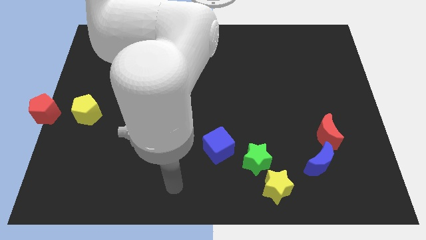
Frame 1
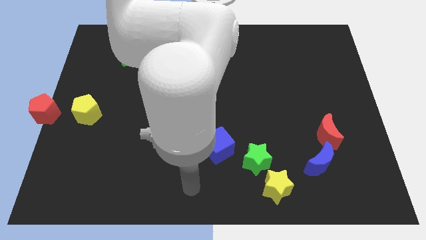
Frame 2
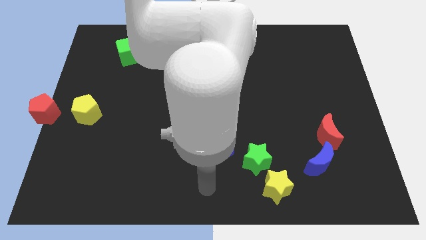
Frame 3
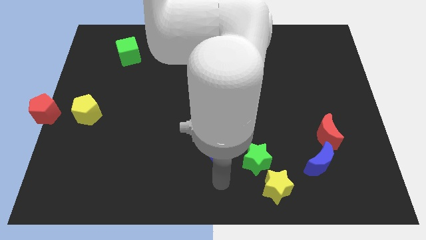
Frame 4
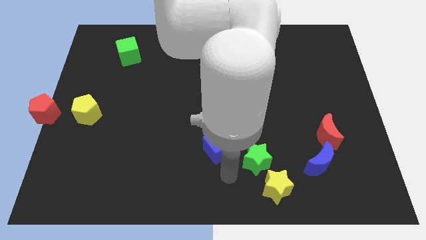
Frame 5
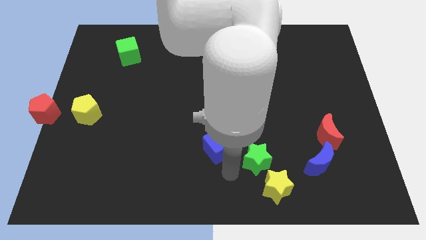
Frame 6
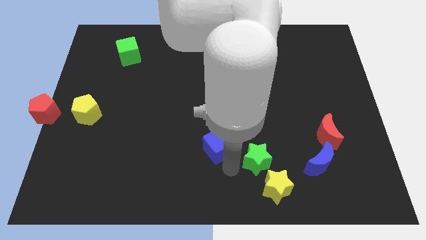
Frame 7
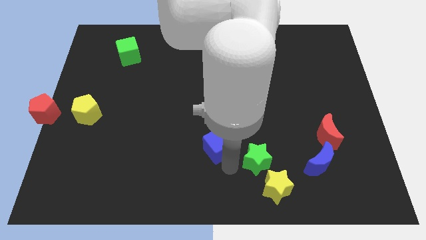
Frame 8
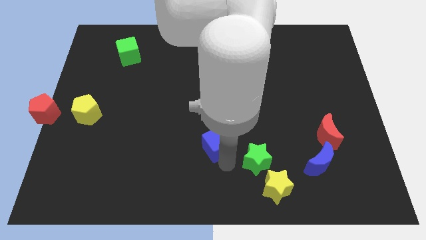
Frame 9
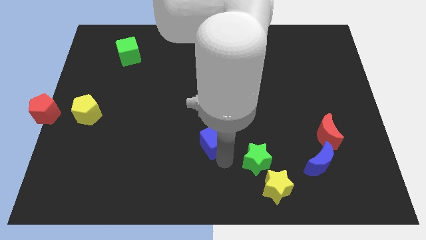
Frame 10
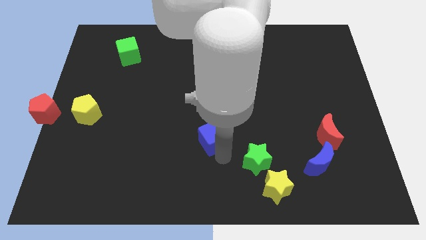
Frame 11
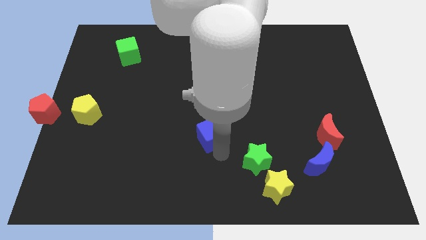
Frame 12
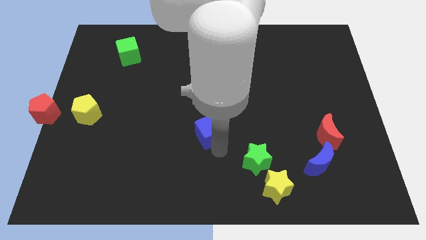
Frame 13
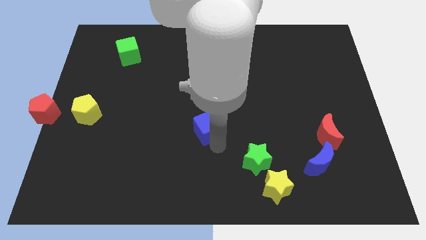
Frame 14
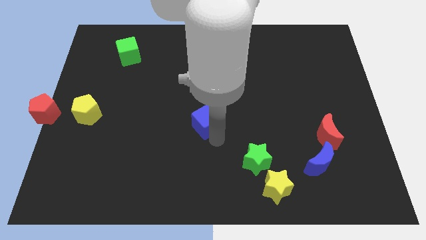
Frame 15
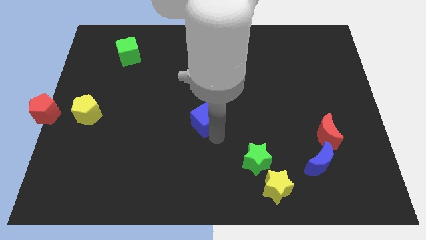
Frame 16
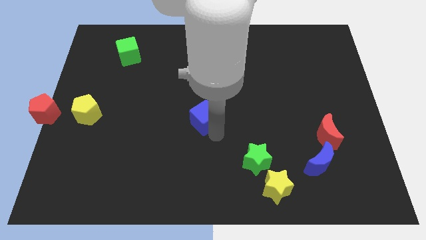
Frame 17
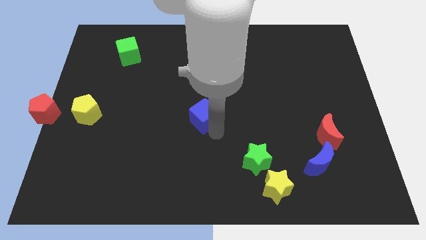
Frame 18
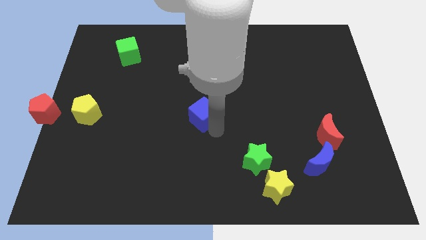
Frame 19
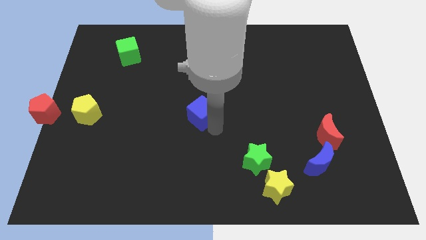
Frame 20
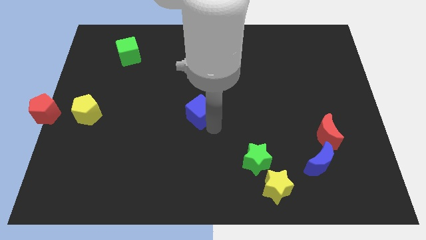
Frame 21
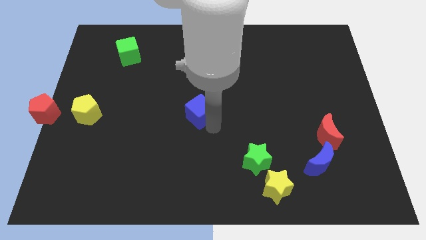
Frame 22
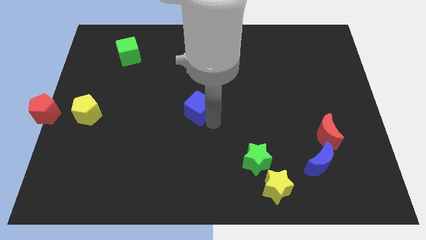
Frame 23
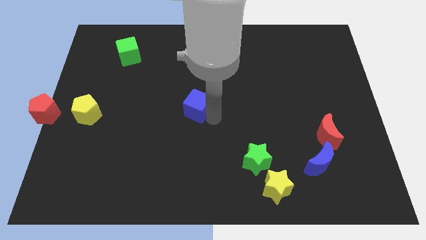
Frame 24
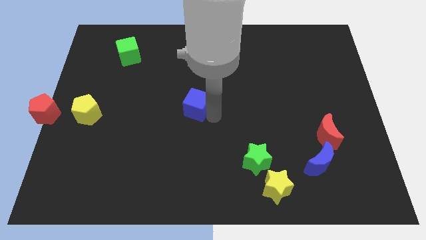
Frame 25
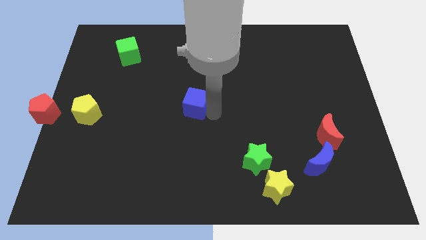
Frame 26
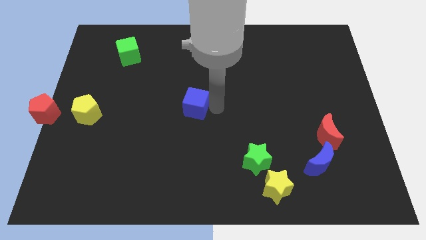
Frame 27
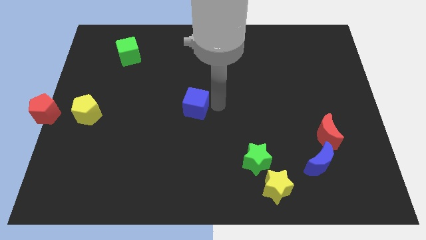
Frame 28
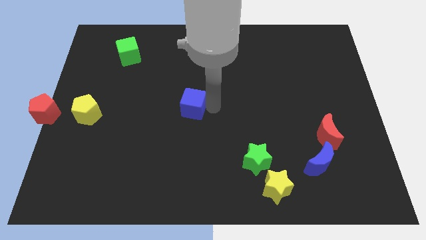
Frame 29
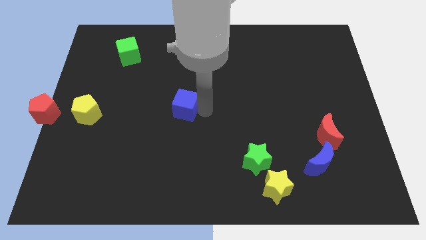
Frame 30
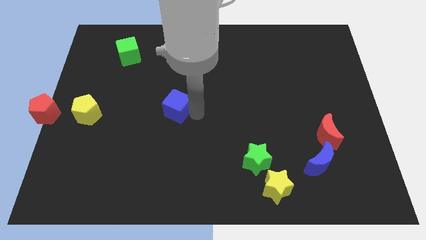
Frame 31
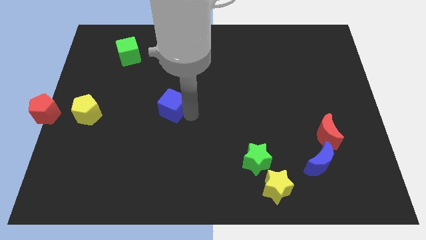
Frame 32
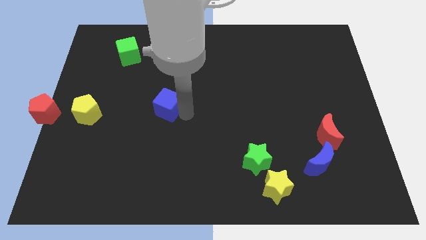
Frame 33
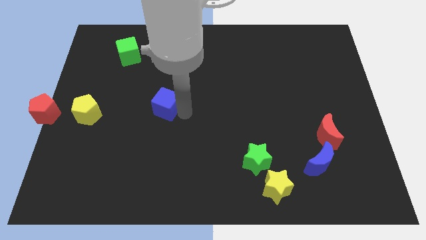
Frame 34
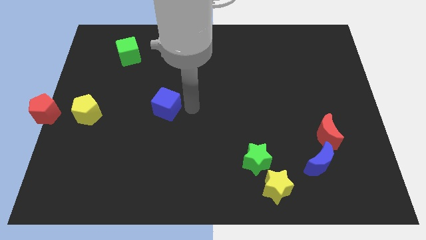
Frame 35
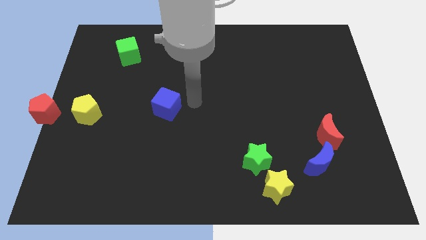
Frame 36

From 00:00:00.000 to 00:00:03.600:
push the blue cube parallel right to the yellow pentagon

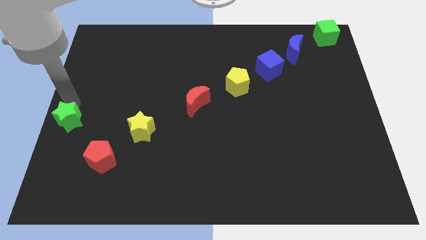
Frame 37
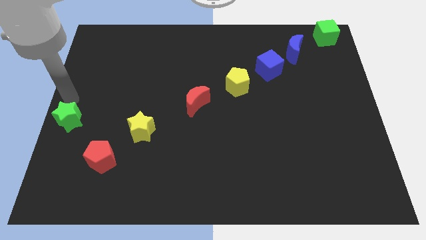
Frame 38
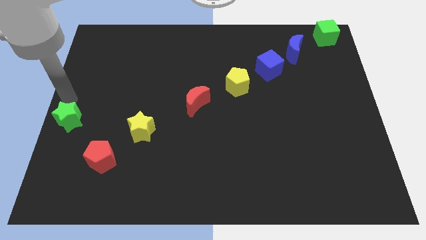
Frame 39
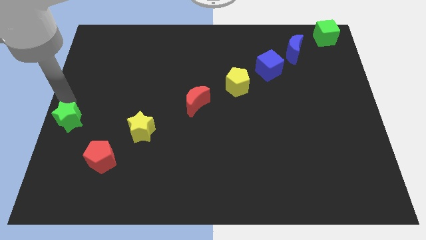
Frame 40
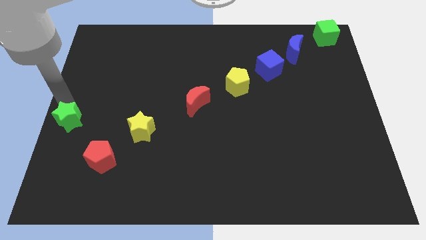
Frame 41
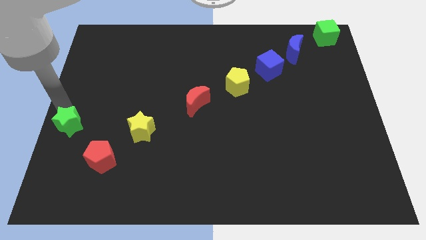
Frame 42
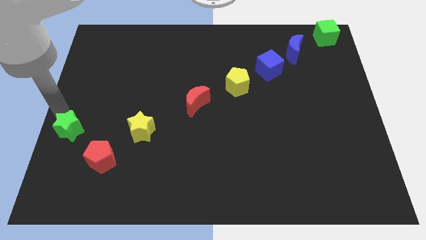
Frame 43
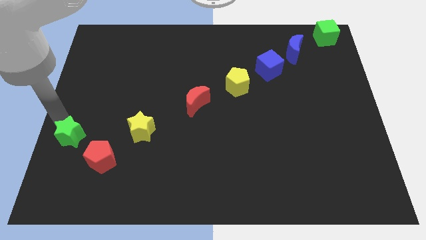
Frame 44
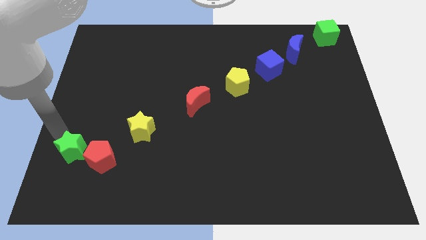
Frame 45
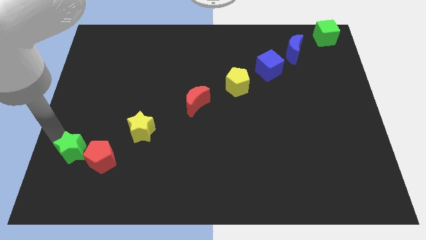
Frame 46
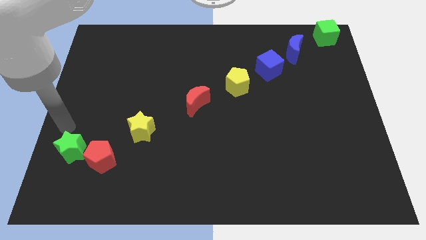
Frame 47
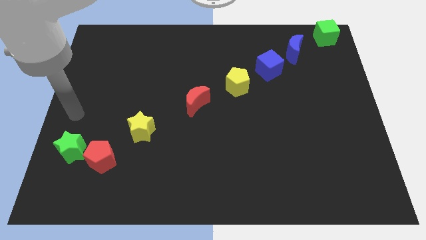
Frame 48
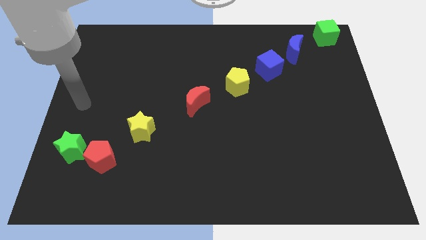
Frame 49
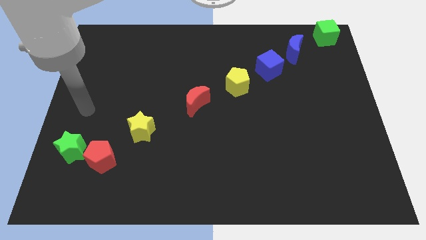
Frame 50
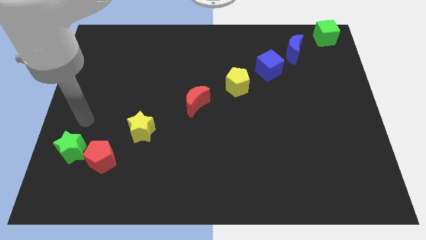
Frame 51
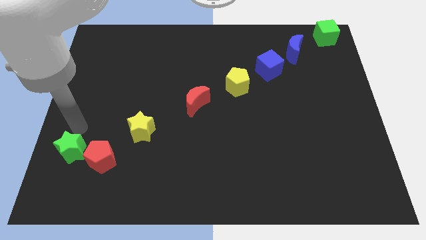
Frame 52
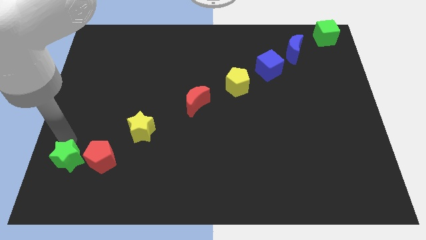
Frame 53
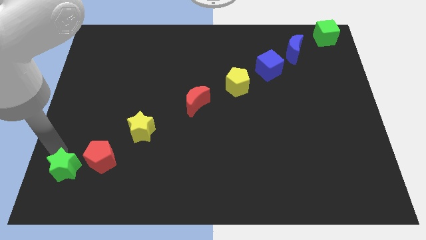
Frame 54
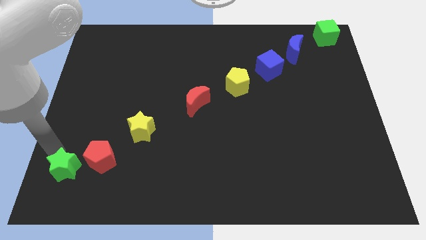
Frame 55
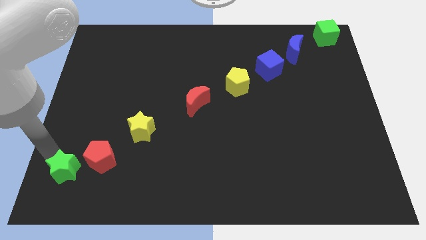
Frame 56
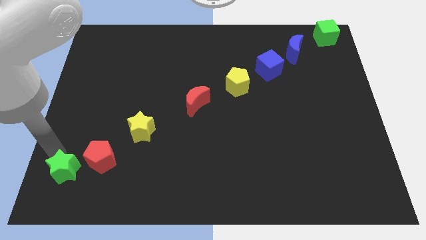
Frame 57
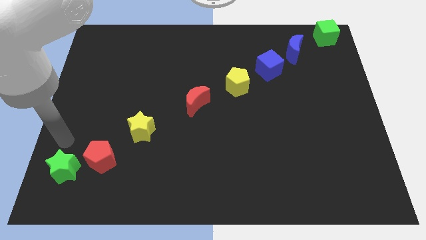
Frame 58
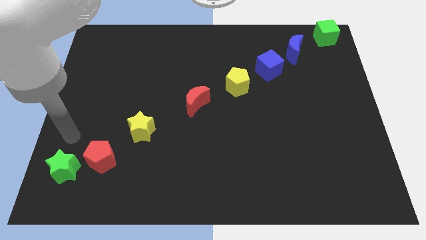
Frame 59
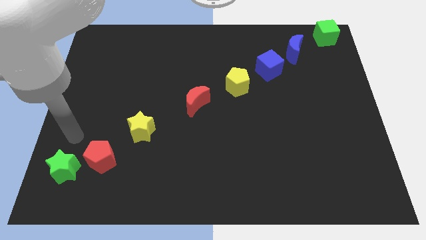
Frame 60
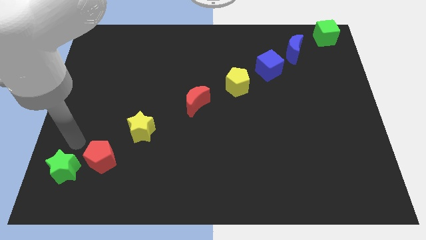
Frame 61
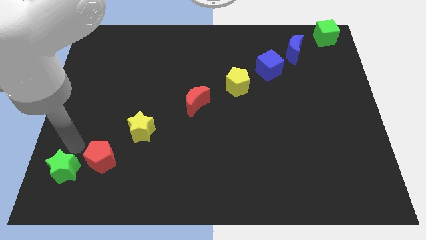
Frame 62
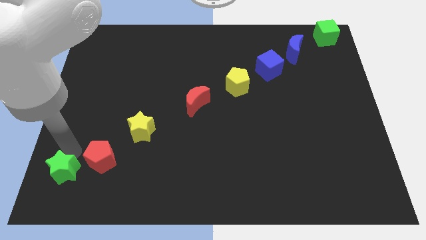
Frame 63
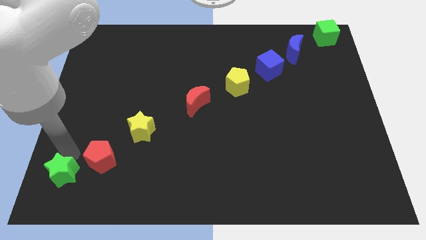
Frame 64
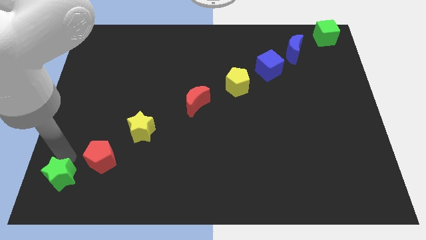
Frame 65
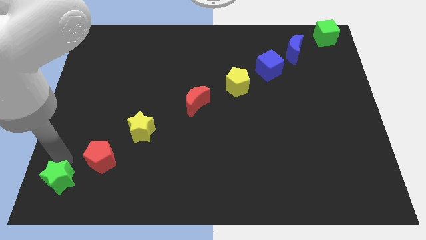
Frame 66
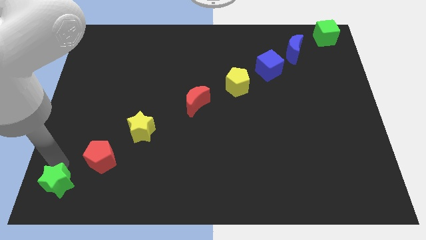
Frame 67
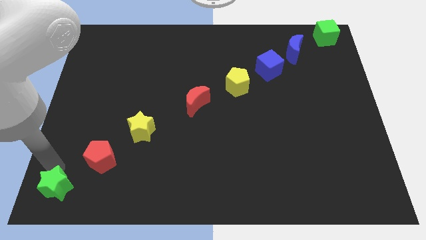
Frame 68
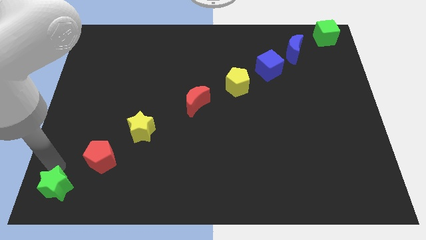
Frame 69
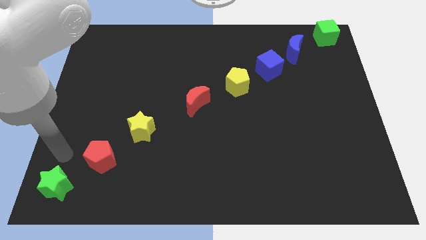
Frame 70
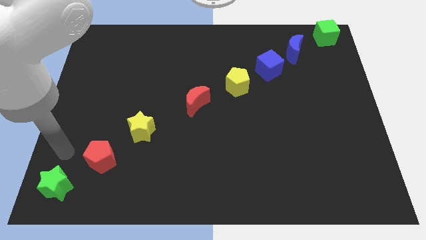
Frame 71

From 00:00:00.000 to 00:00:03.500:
place the green star at the bottom left corner of the board

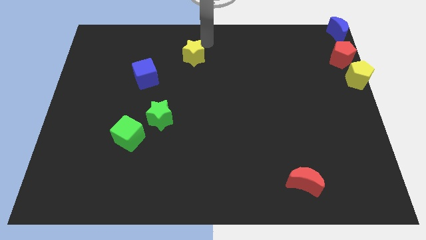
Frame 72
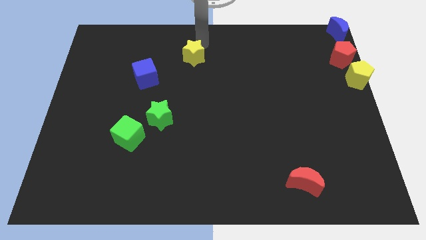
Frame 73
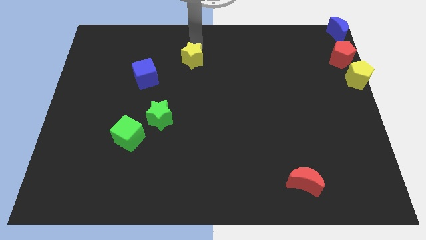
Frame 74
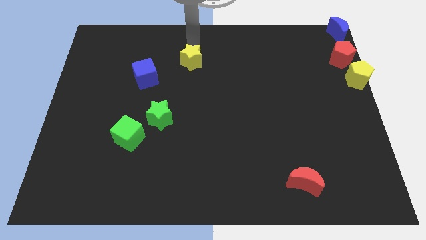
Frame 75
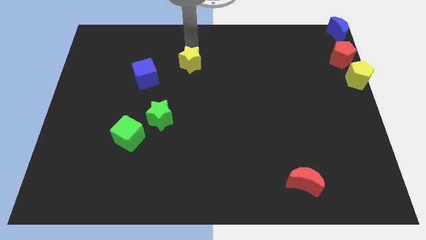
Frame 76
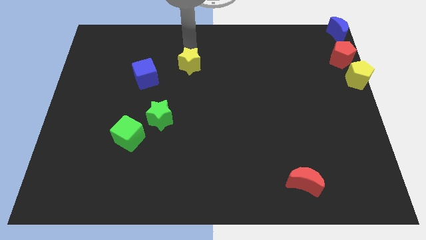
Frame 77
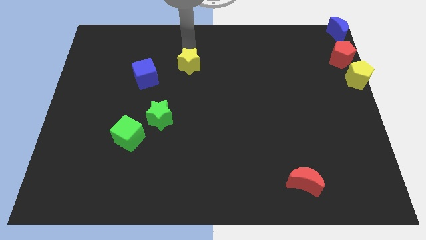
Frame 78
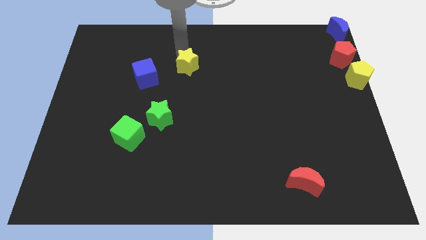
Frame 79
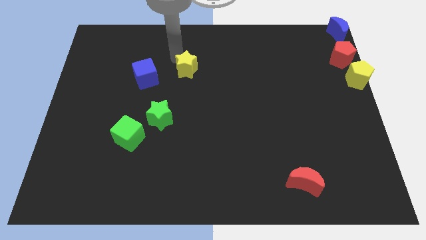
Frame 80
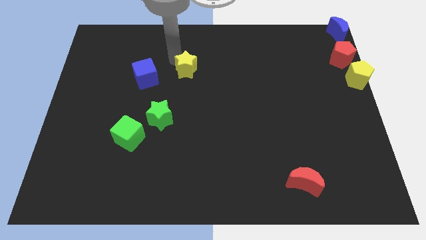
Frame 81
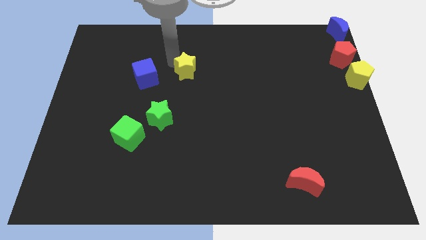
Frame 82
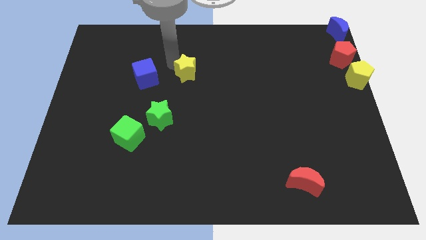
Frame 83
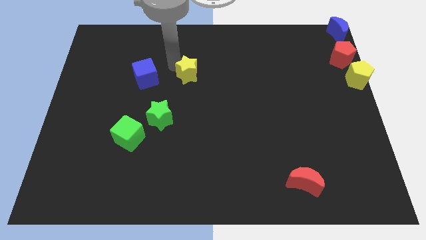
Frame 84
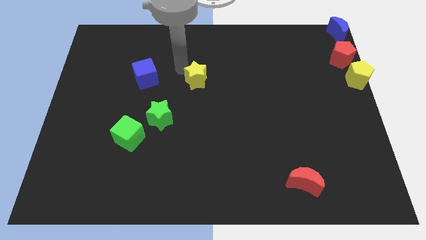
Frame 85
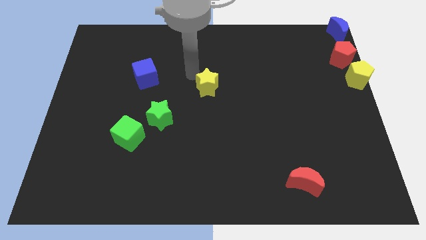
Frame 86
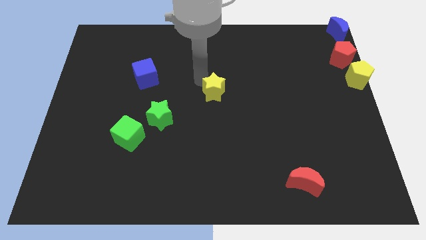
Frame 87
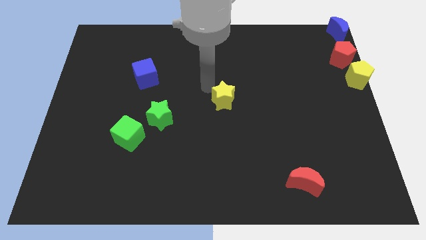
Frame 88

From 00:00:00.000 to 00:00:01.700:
push the yellow star to the center of the board

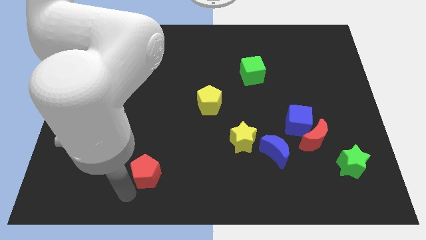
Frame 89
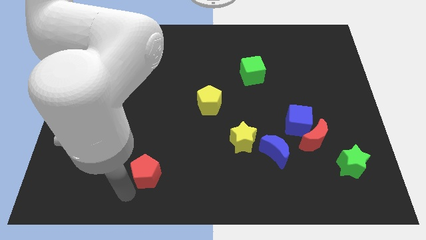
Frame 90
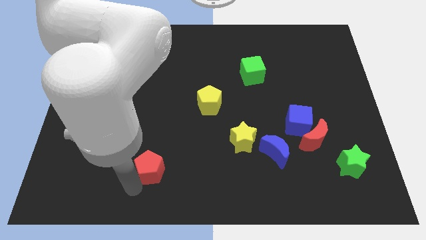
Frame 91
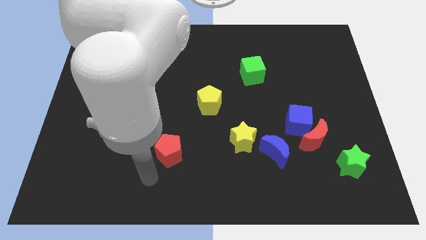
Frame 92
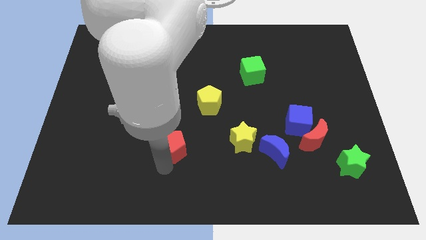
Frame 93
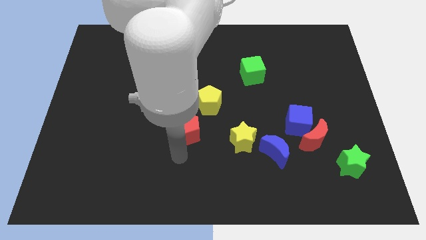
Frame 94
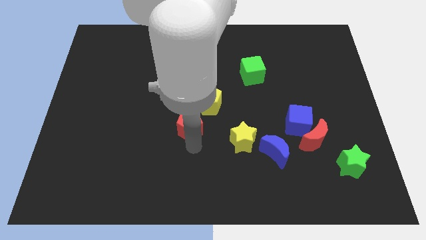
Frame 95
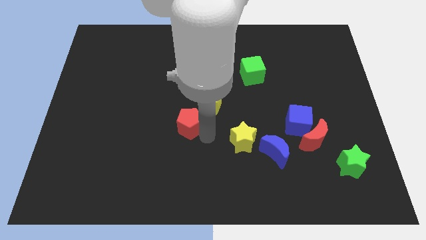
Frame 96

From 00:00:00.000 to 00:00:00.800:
move the red pentagon to the top of the board
